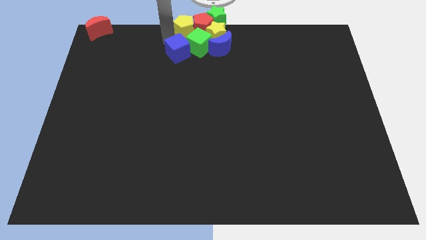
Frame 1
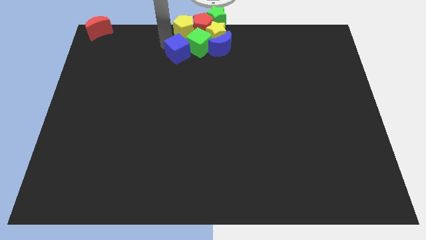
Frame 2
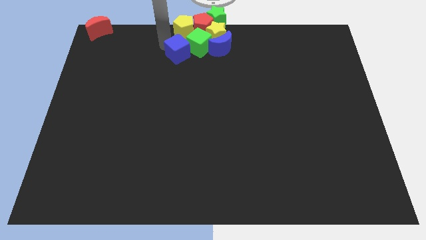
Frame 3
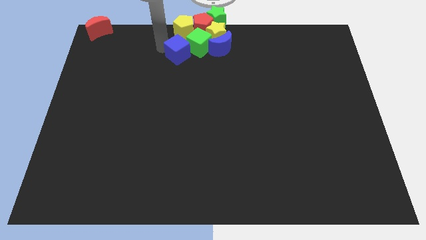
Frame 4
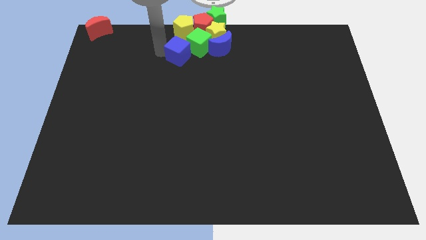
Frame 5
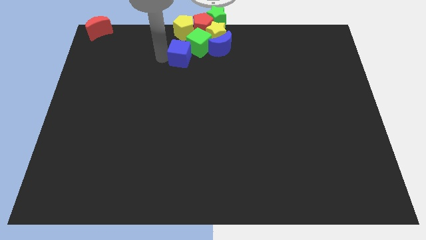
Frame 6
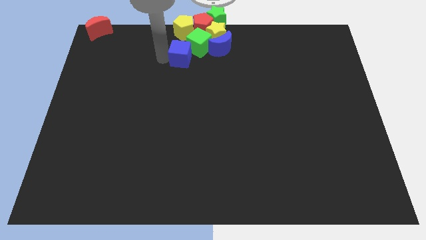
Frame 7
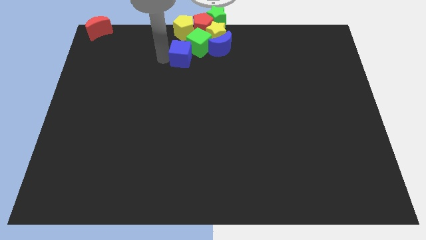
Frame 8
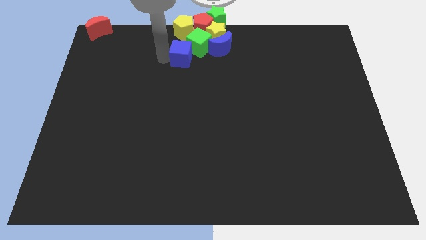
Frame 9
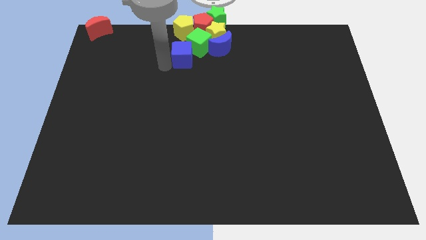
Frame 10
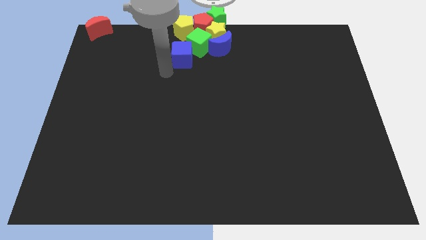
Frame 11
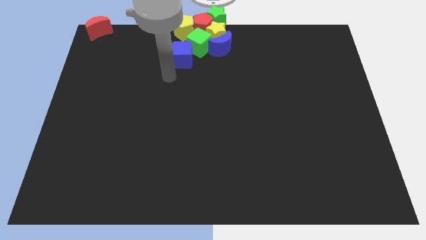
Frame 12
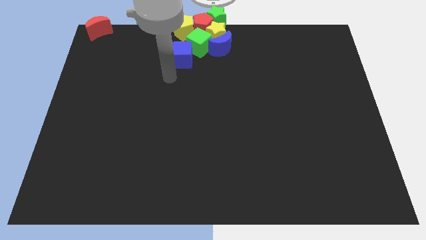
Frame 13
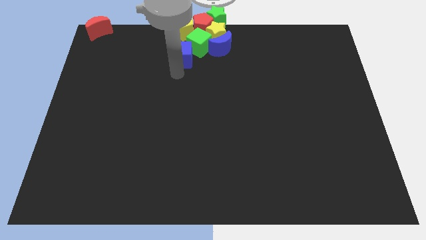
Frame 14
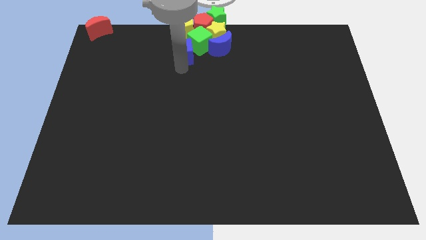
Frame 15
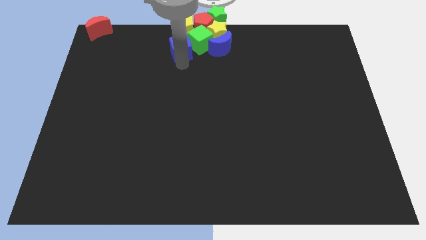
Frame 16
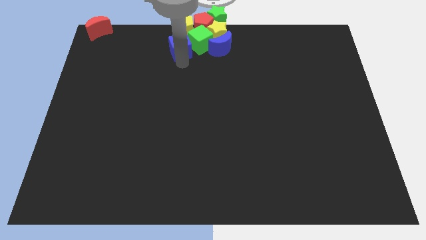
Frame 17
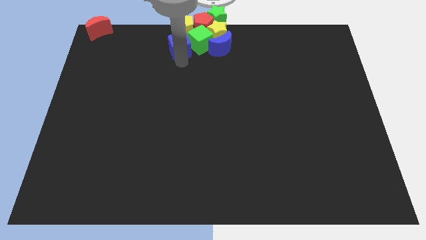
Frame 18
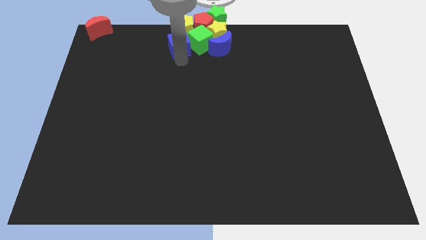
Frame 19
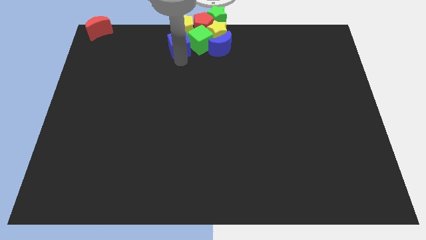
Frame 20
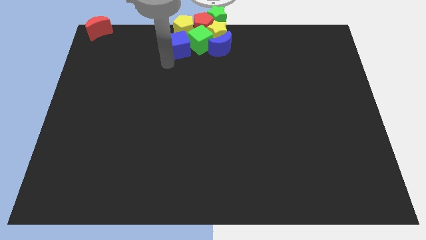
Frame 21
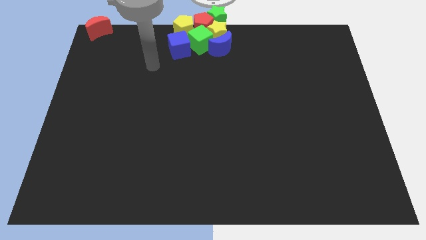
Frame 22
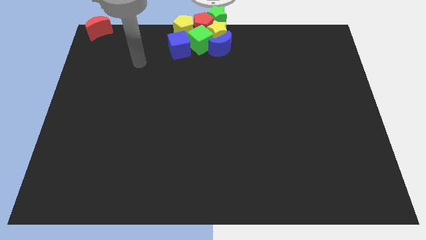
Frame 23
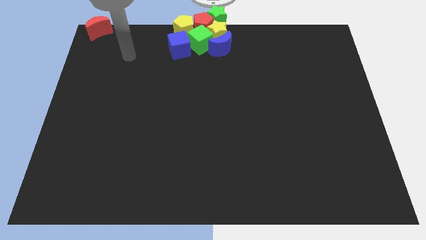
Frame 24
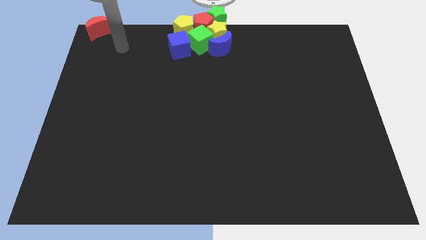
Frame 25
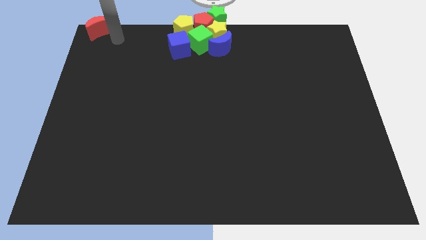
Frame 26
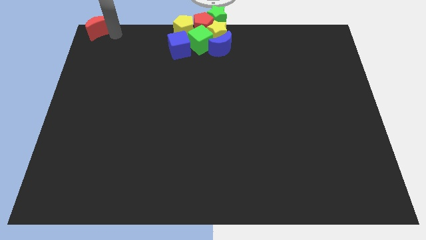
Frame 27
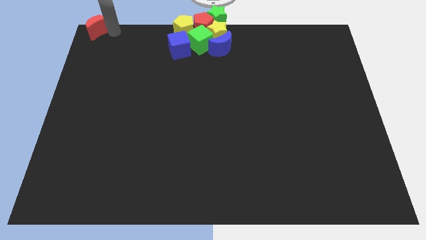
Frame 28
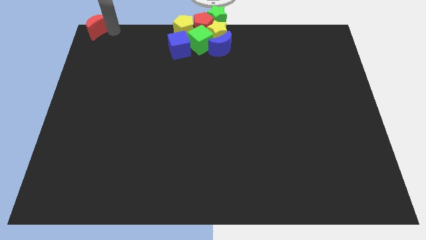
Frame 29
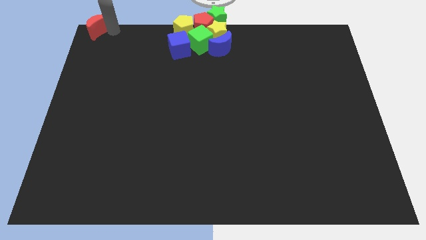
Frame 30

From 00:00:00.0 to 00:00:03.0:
point your arm close to red moon

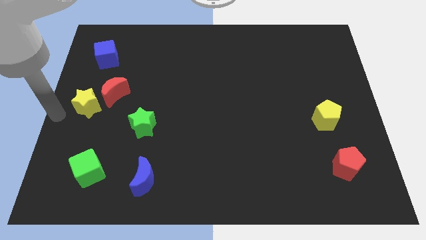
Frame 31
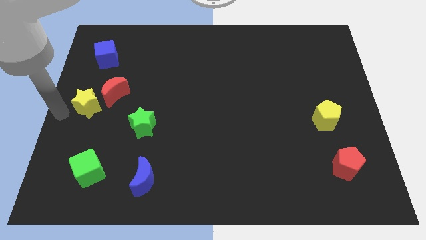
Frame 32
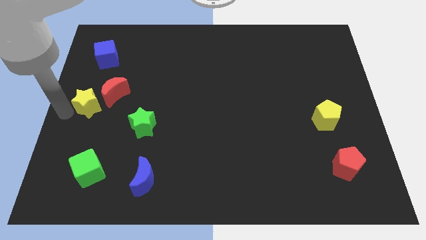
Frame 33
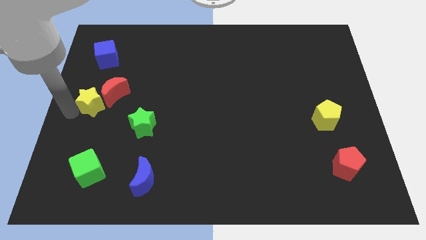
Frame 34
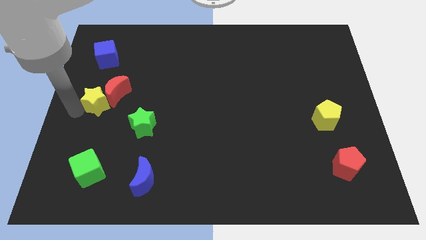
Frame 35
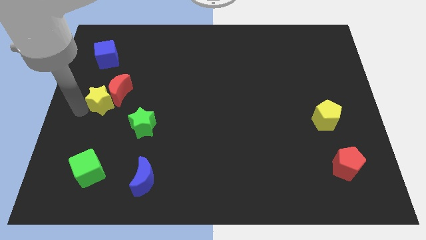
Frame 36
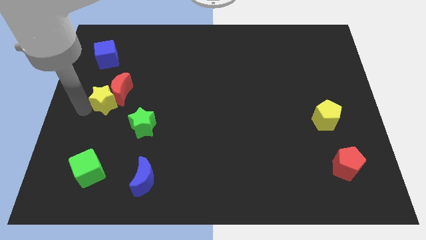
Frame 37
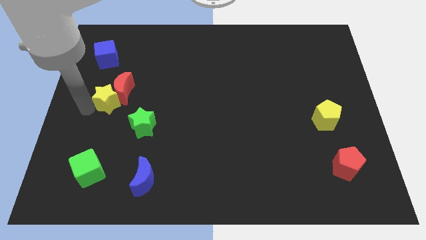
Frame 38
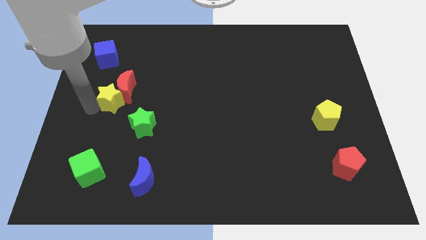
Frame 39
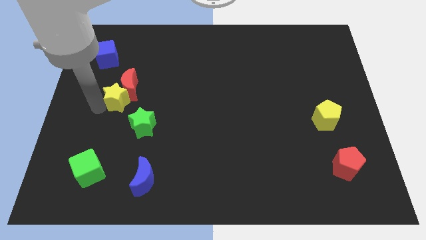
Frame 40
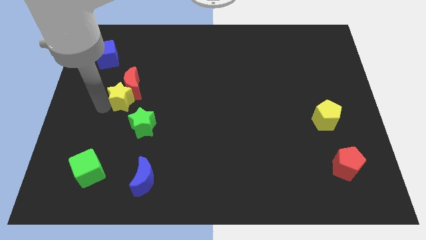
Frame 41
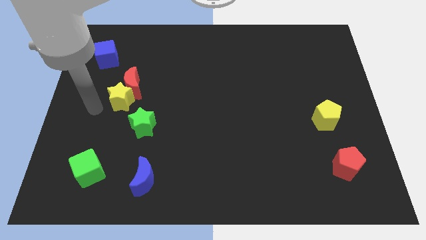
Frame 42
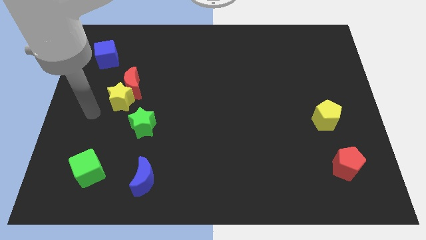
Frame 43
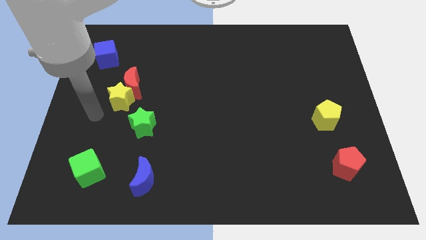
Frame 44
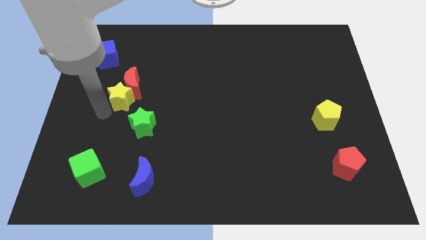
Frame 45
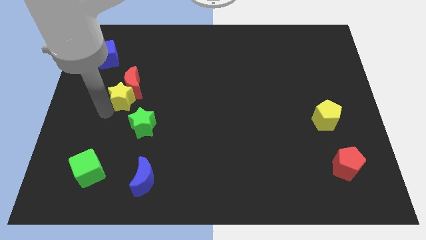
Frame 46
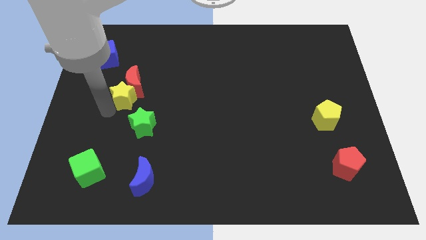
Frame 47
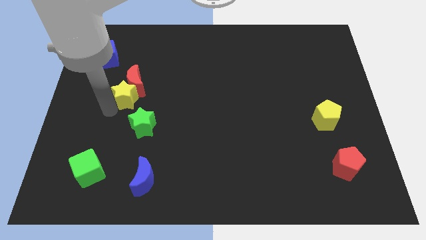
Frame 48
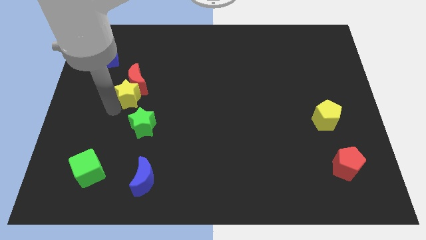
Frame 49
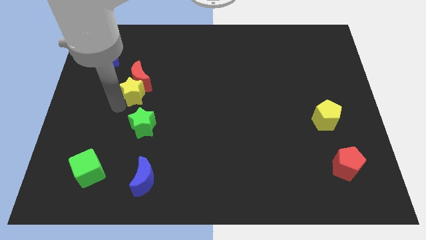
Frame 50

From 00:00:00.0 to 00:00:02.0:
push the red moon with yellow star

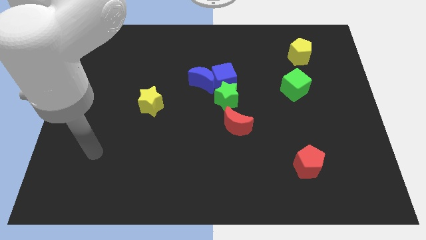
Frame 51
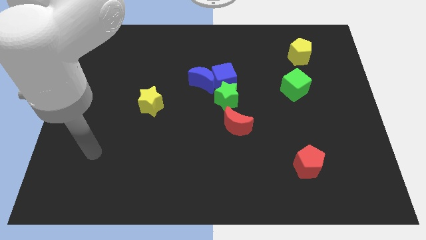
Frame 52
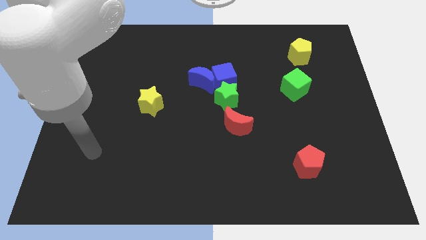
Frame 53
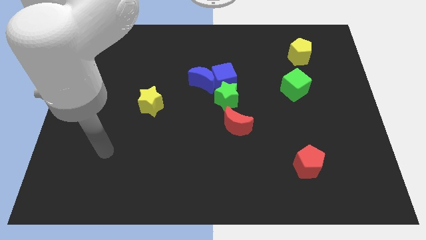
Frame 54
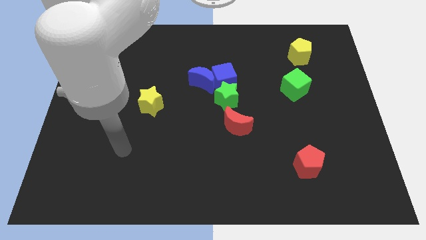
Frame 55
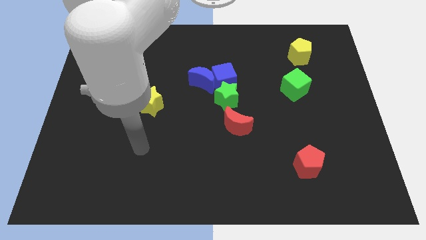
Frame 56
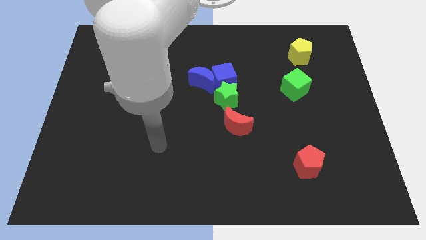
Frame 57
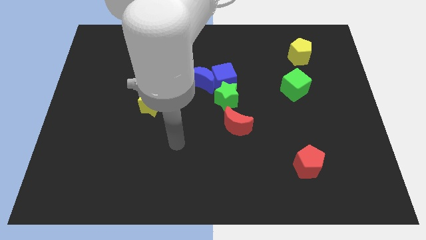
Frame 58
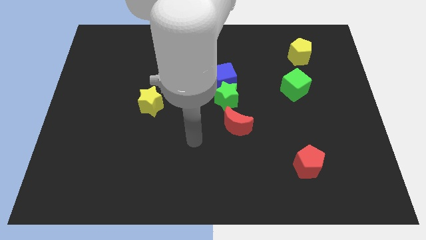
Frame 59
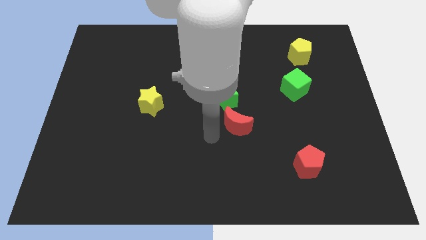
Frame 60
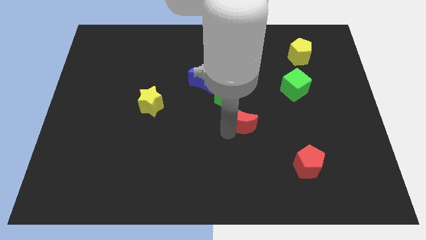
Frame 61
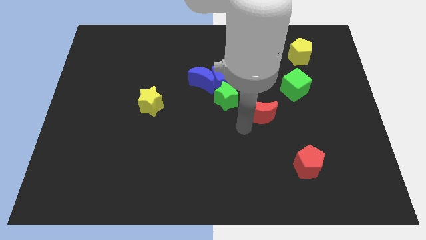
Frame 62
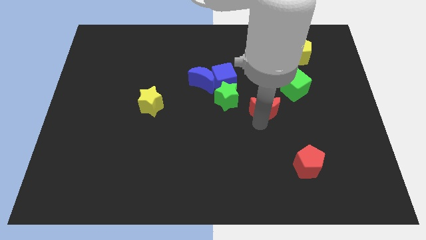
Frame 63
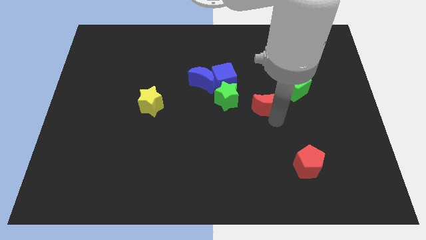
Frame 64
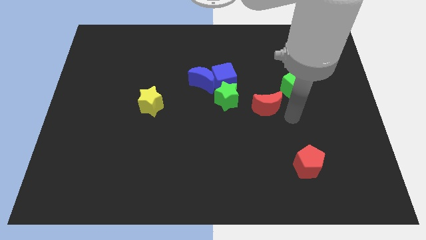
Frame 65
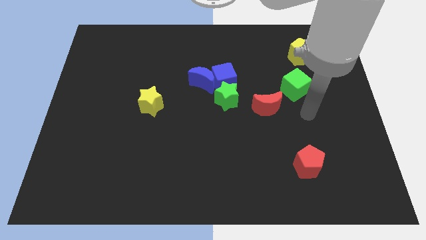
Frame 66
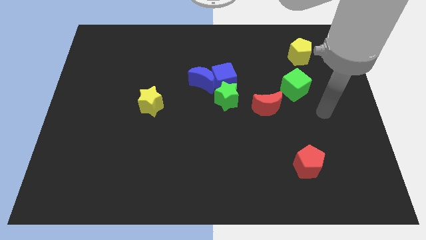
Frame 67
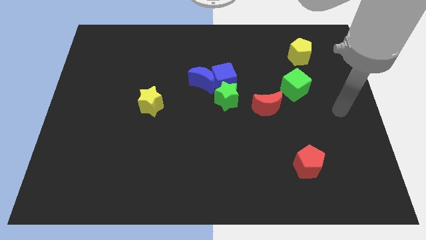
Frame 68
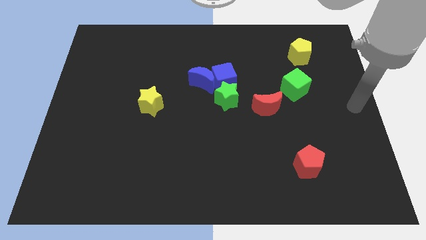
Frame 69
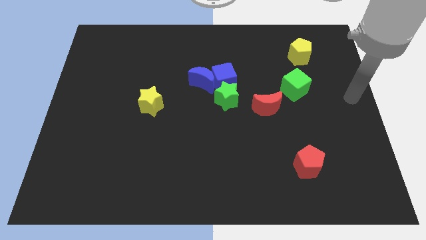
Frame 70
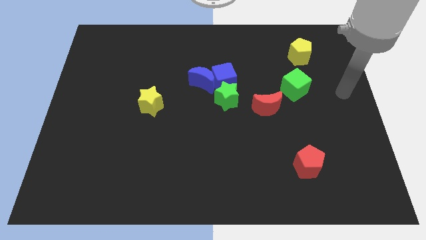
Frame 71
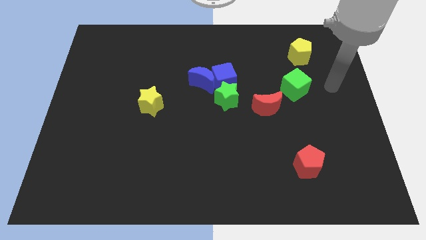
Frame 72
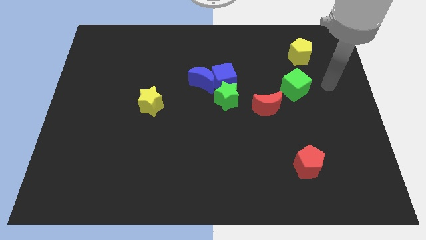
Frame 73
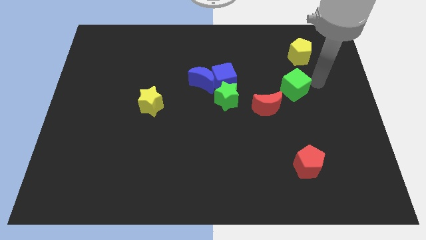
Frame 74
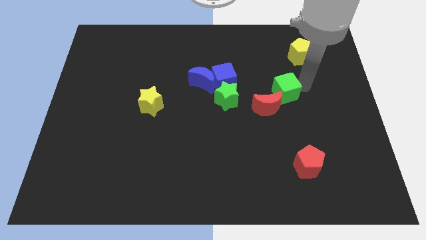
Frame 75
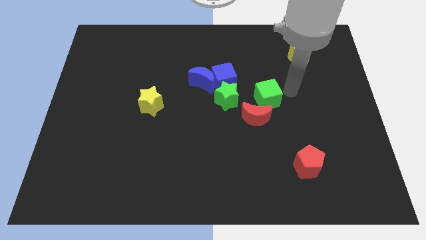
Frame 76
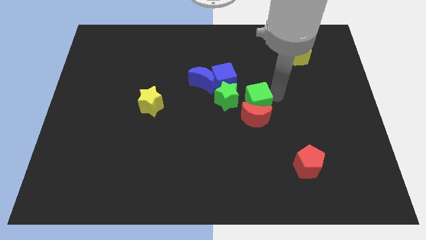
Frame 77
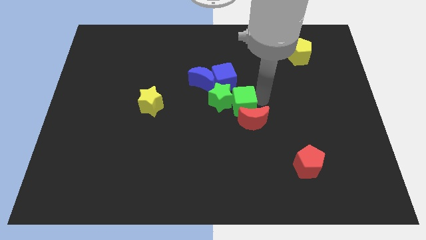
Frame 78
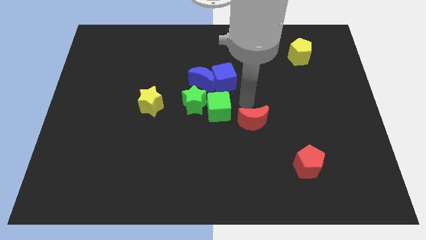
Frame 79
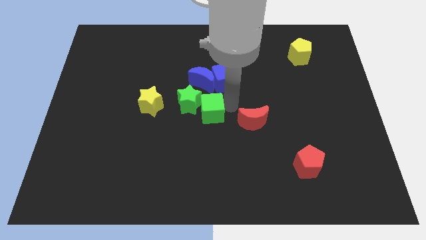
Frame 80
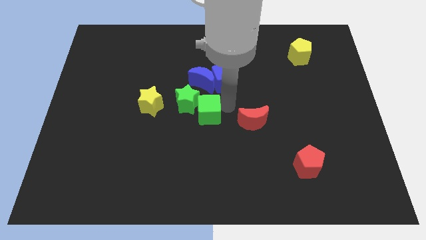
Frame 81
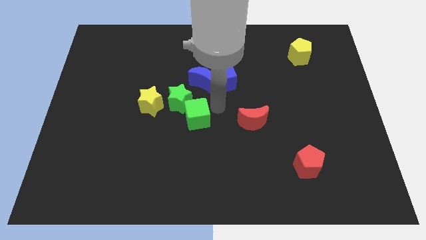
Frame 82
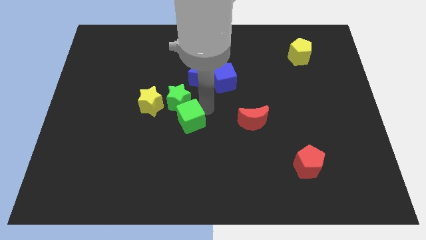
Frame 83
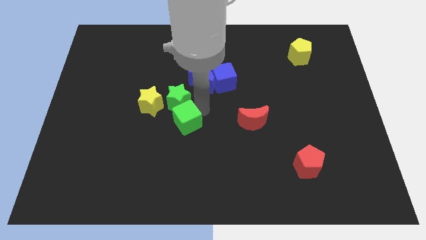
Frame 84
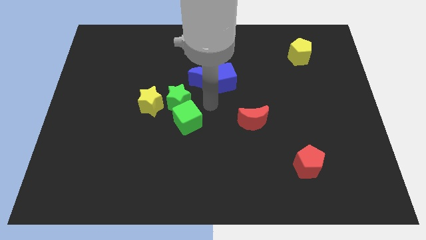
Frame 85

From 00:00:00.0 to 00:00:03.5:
put the green cube into the green star

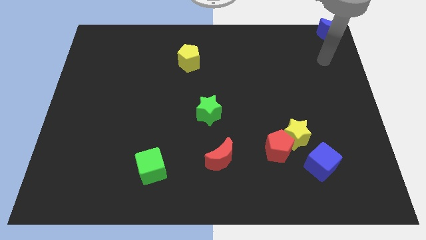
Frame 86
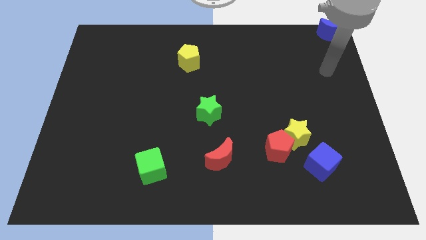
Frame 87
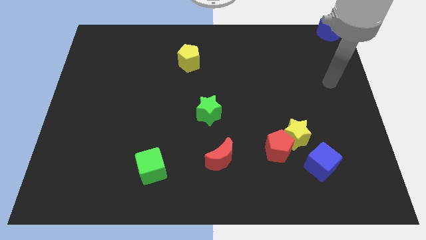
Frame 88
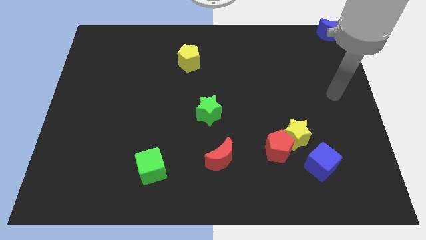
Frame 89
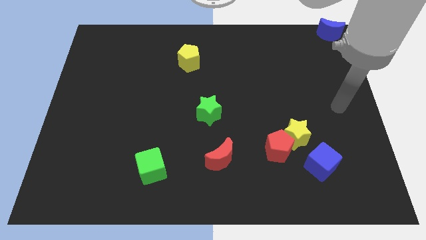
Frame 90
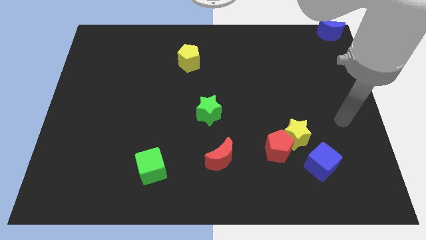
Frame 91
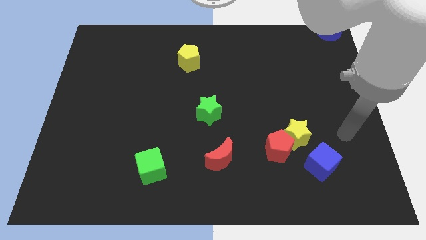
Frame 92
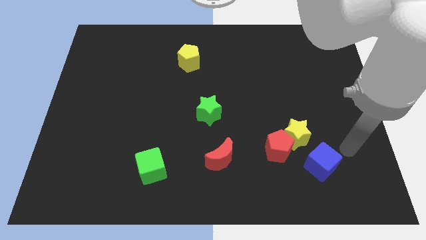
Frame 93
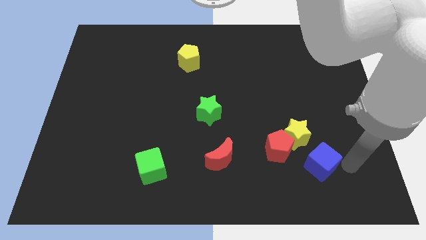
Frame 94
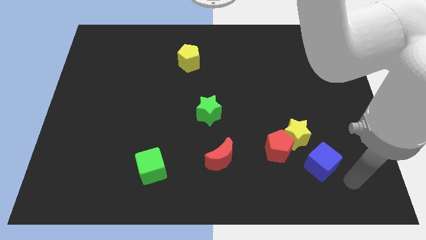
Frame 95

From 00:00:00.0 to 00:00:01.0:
move arm to the blue cube
